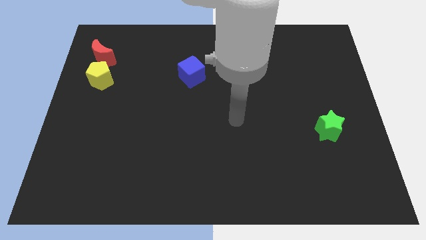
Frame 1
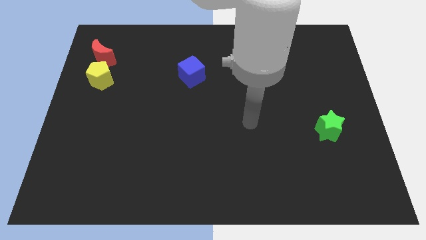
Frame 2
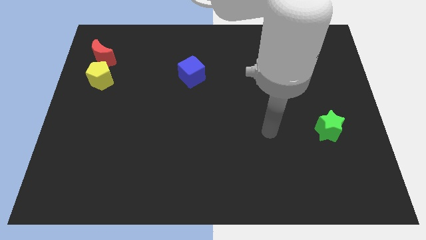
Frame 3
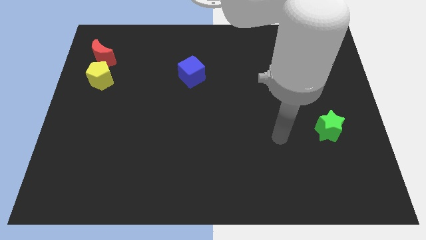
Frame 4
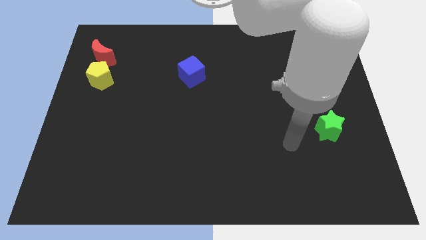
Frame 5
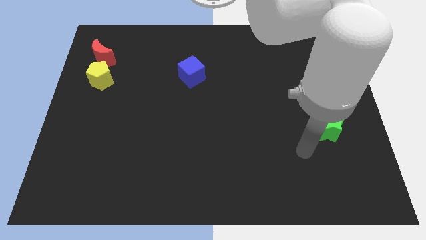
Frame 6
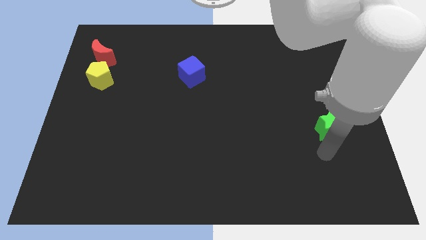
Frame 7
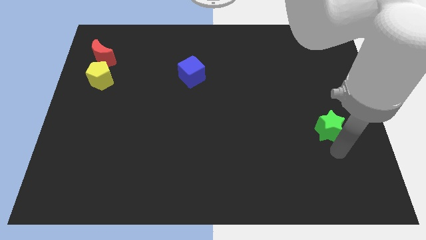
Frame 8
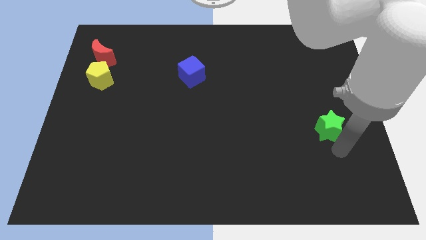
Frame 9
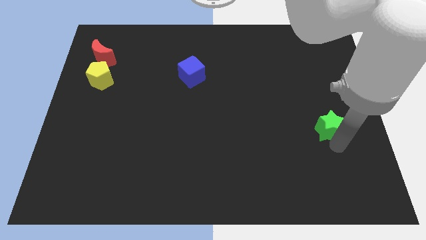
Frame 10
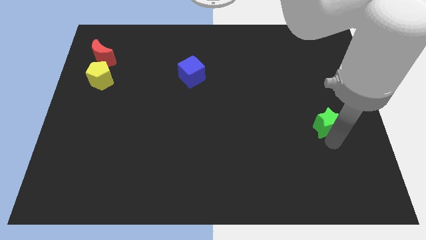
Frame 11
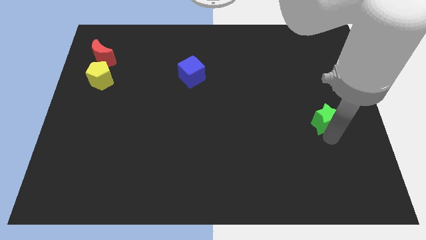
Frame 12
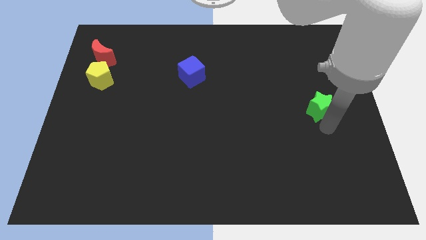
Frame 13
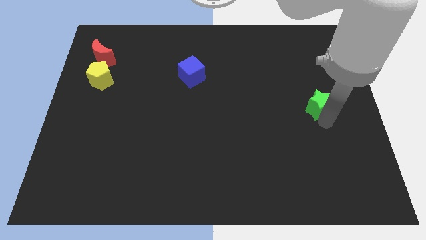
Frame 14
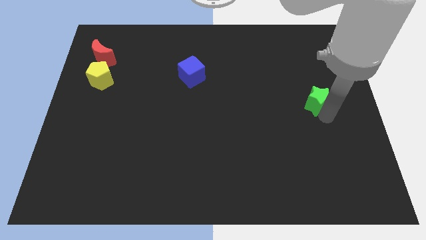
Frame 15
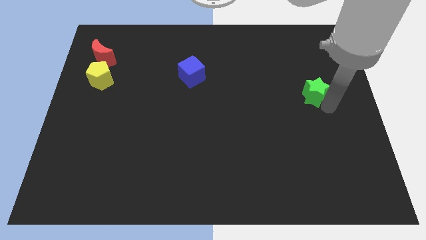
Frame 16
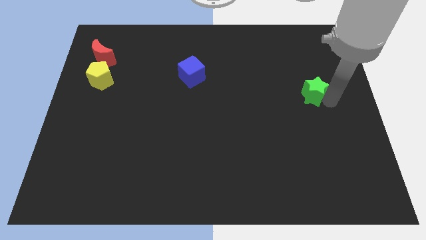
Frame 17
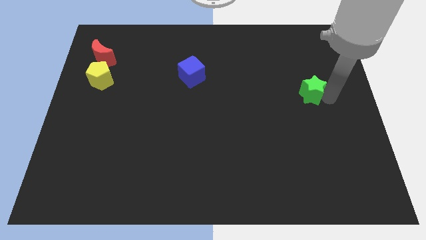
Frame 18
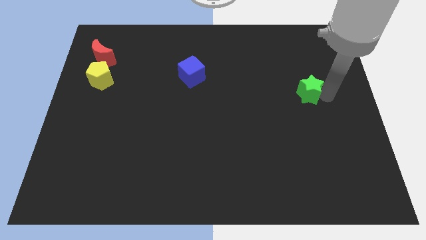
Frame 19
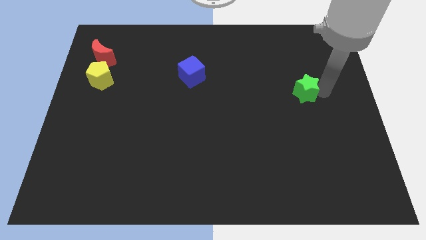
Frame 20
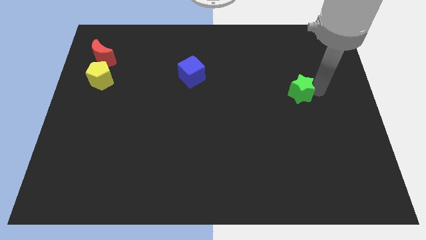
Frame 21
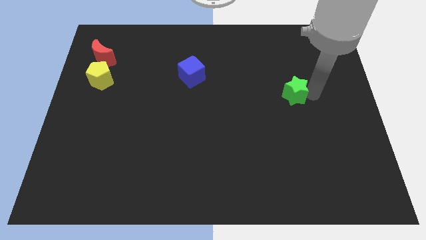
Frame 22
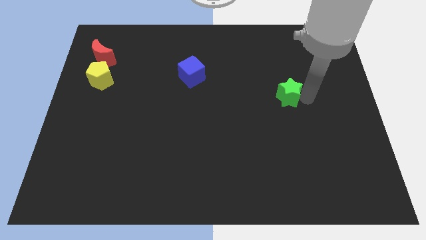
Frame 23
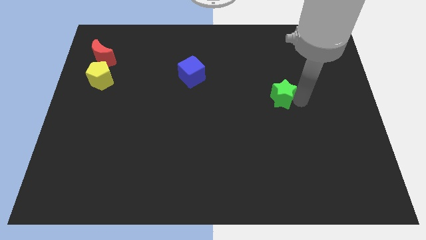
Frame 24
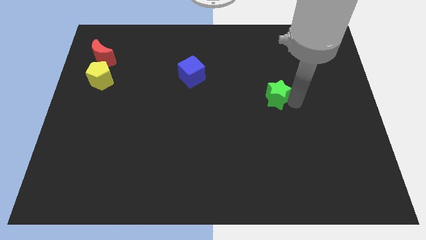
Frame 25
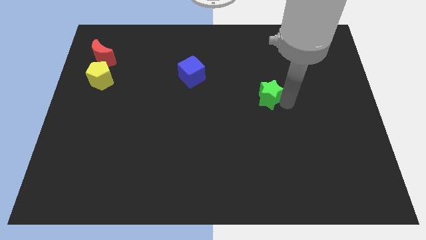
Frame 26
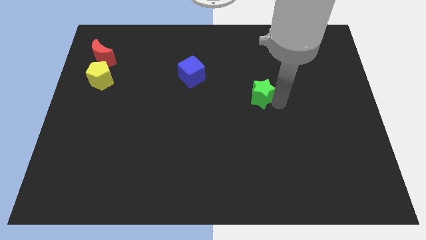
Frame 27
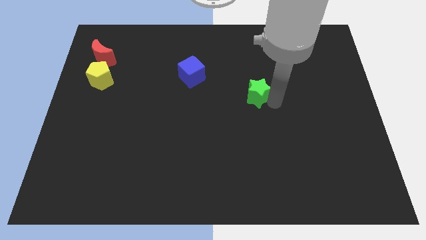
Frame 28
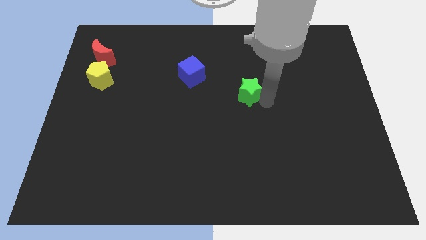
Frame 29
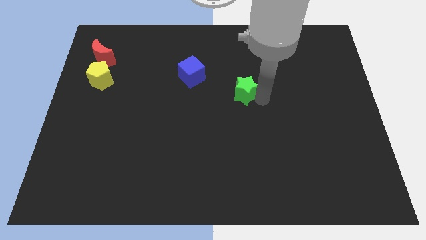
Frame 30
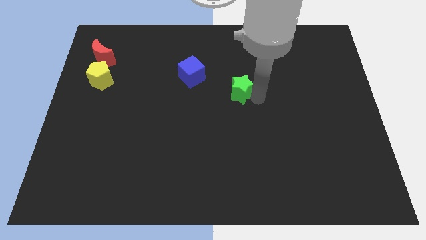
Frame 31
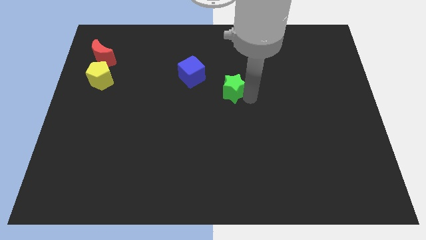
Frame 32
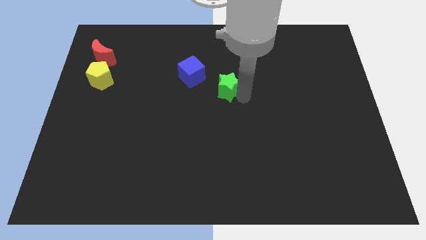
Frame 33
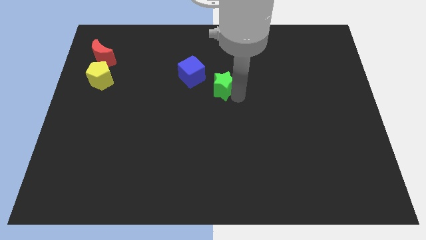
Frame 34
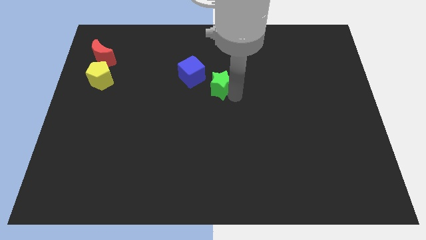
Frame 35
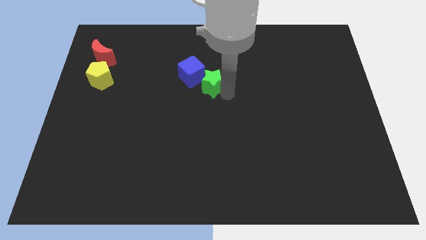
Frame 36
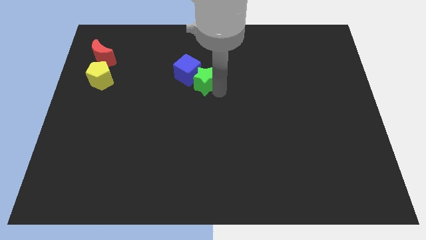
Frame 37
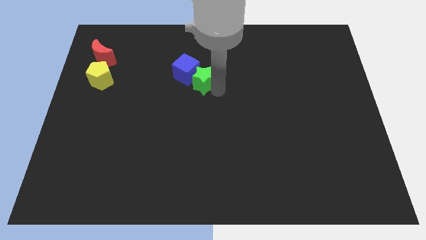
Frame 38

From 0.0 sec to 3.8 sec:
move the star next to the blue cube

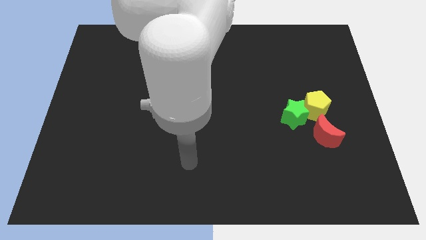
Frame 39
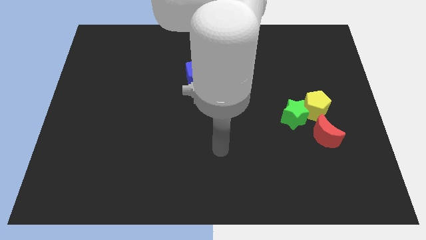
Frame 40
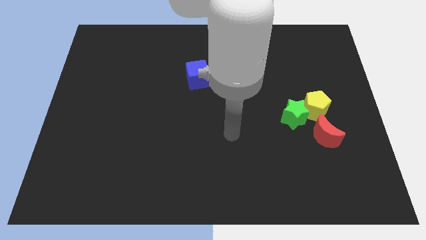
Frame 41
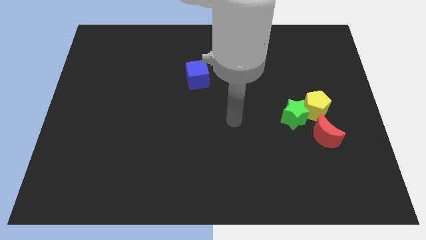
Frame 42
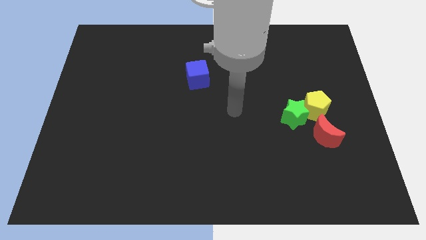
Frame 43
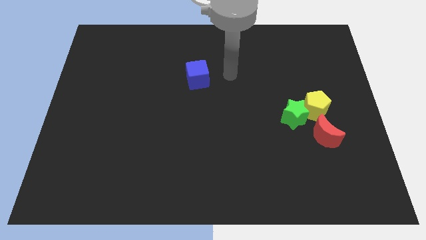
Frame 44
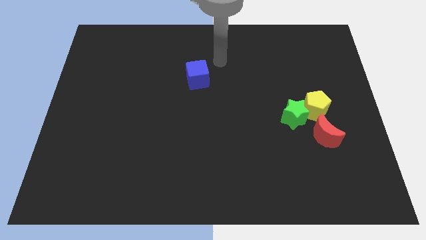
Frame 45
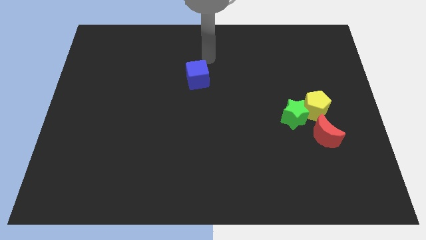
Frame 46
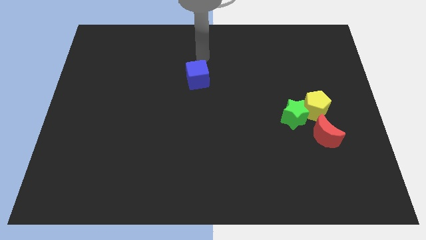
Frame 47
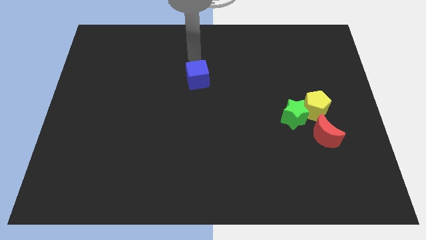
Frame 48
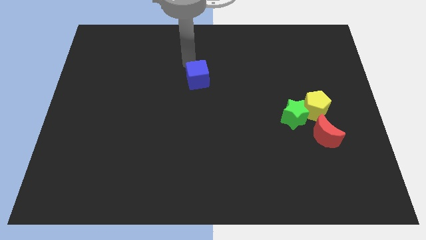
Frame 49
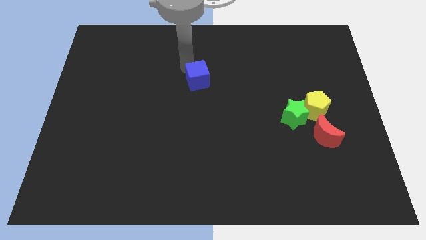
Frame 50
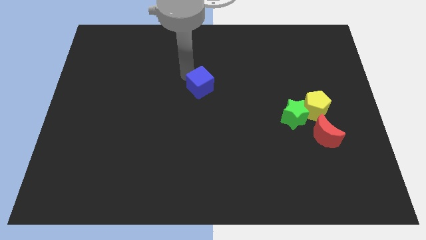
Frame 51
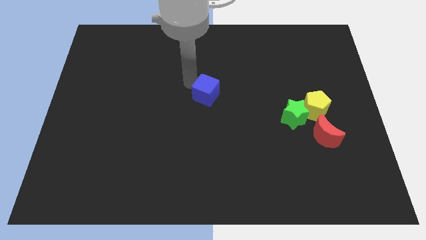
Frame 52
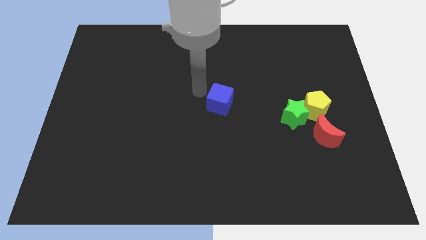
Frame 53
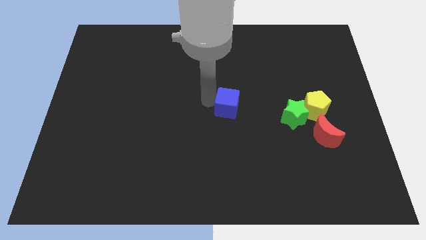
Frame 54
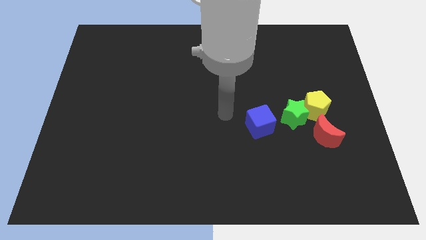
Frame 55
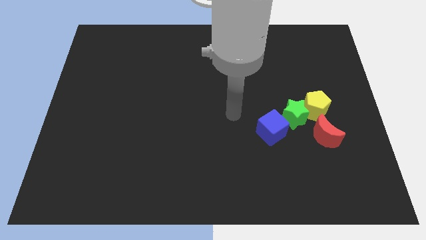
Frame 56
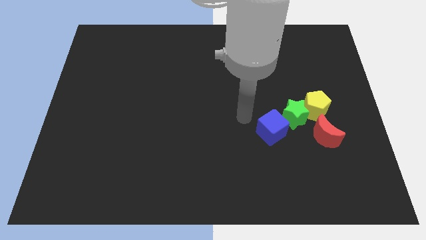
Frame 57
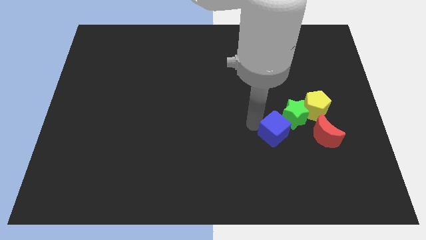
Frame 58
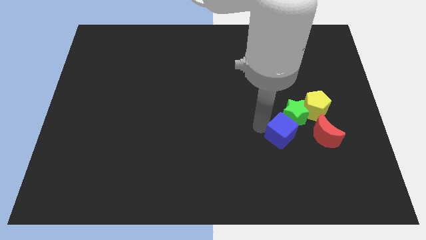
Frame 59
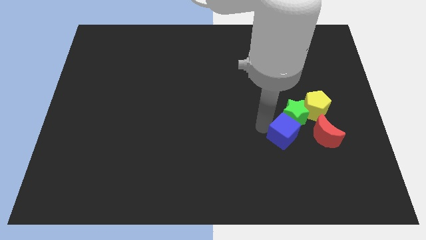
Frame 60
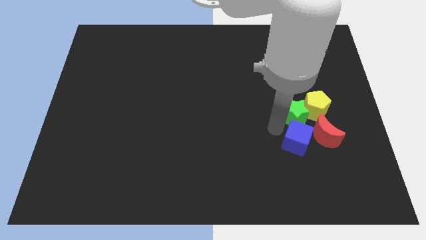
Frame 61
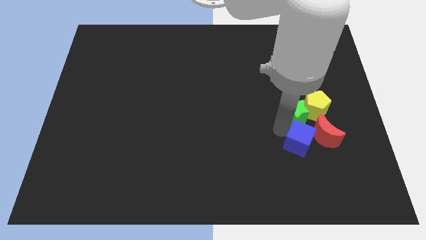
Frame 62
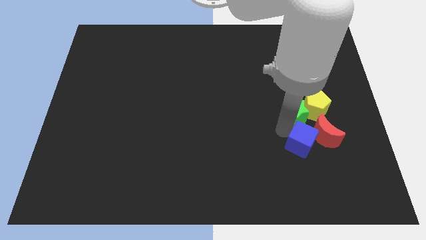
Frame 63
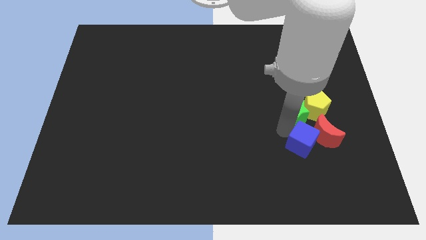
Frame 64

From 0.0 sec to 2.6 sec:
put the cube close to the moon

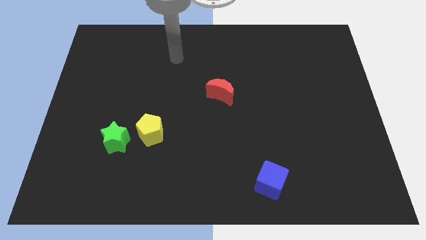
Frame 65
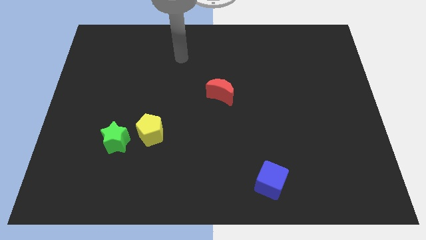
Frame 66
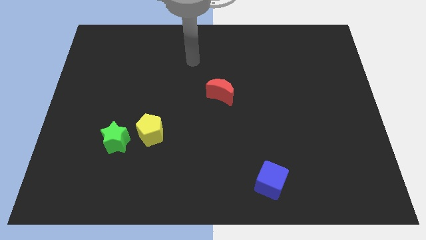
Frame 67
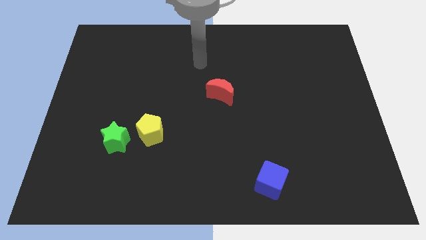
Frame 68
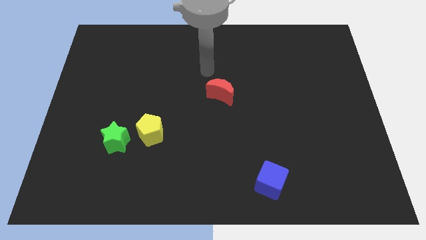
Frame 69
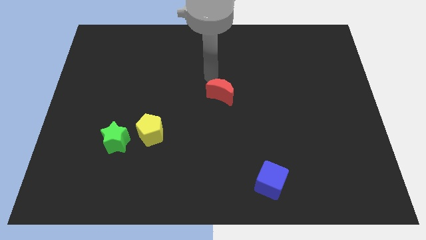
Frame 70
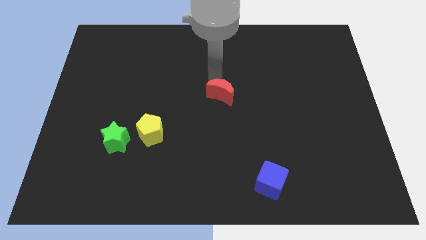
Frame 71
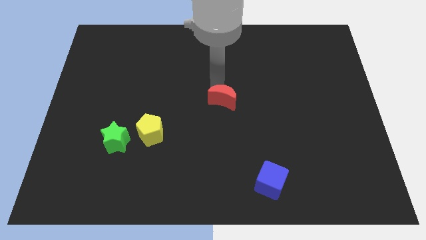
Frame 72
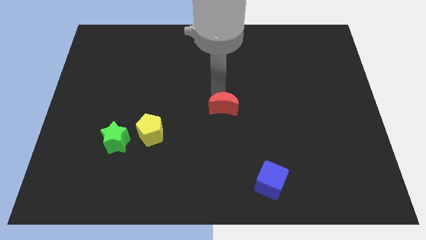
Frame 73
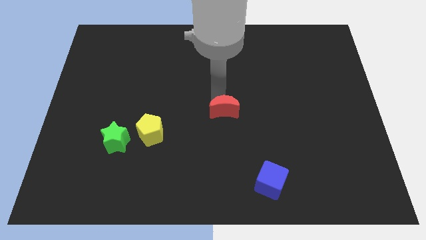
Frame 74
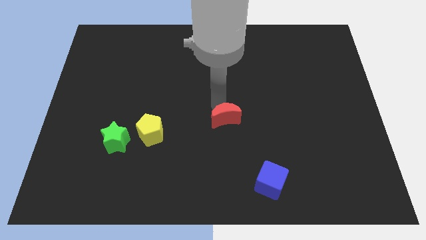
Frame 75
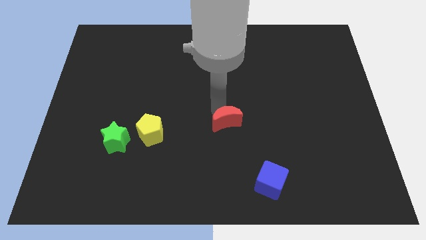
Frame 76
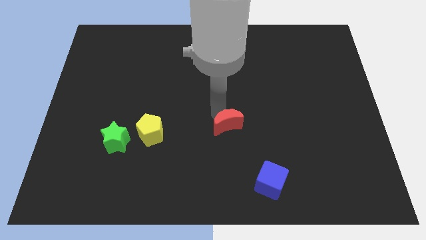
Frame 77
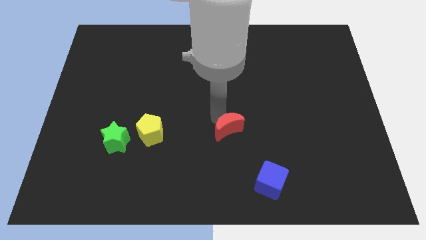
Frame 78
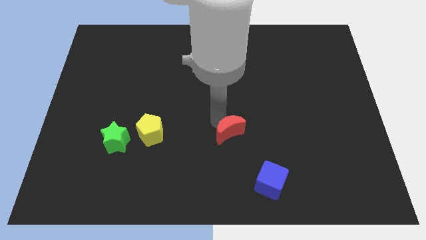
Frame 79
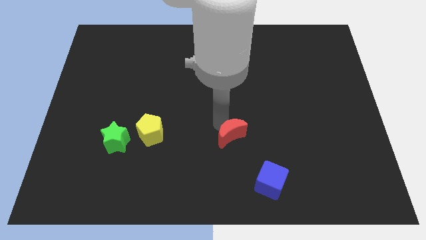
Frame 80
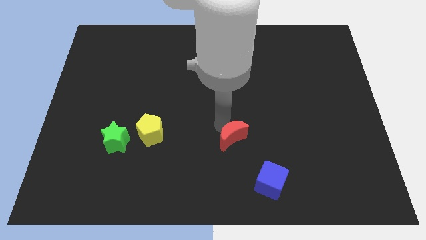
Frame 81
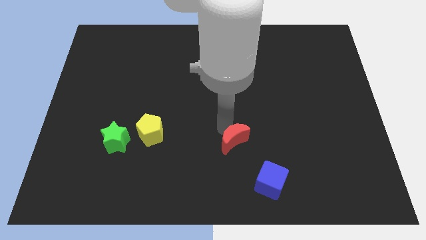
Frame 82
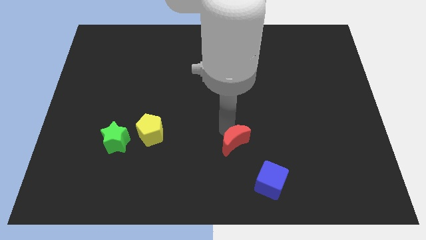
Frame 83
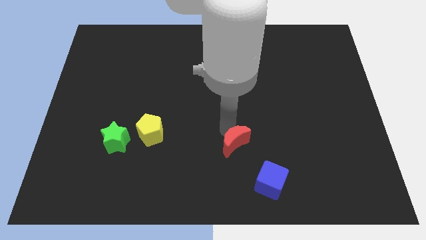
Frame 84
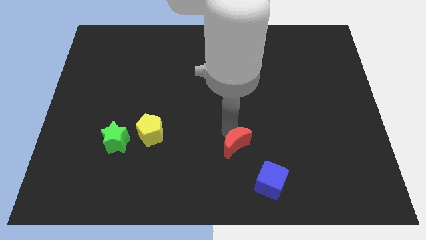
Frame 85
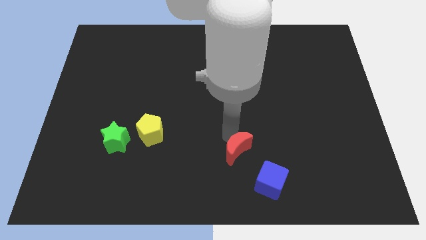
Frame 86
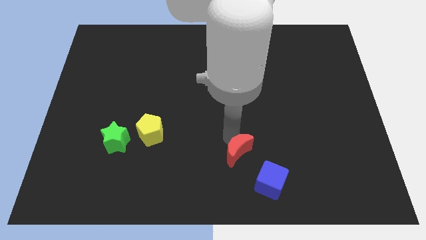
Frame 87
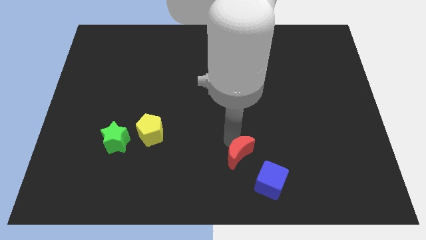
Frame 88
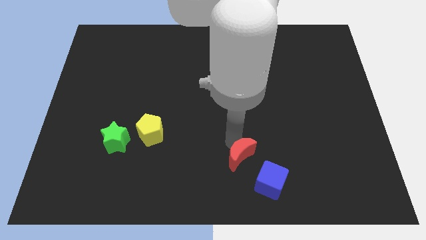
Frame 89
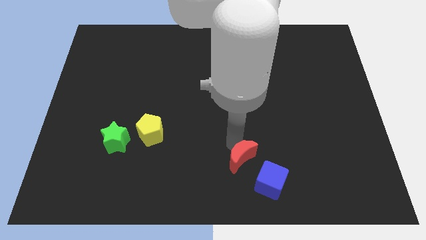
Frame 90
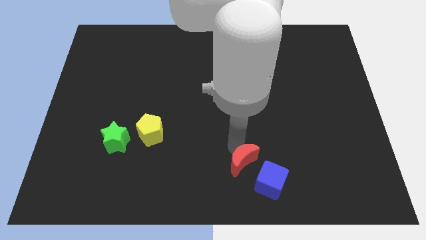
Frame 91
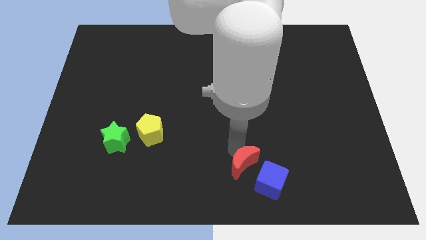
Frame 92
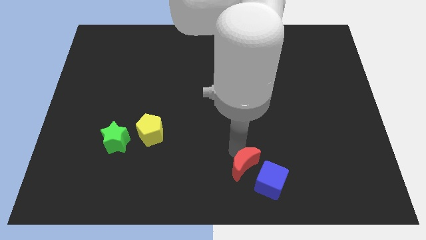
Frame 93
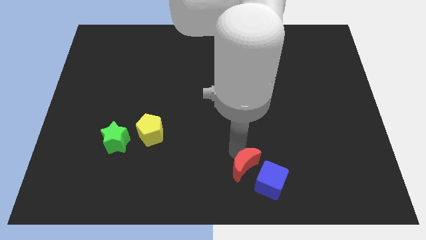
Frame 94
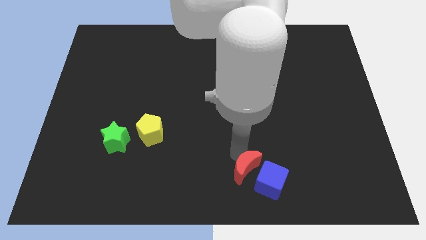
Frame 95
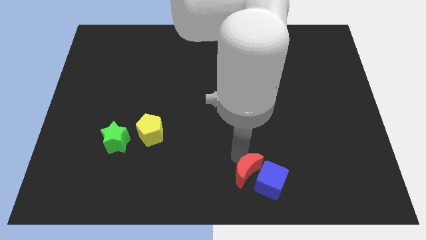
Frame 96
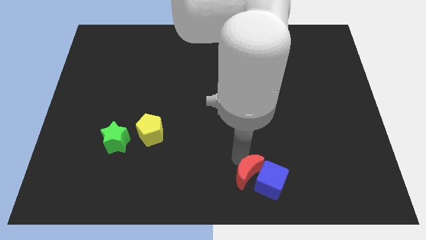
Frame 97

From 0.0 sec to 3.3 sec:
move the moon to the blue block
